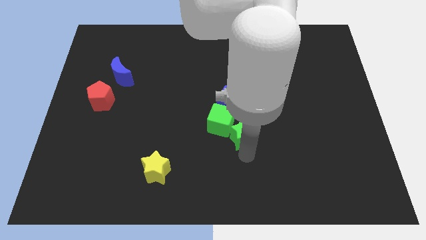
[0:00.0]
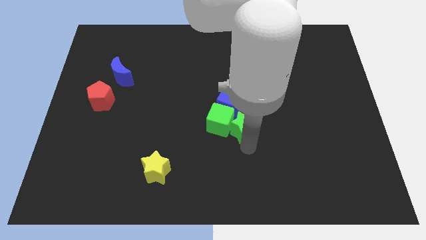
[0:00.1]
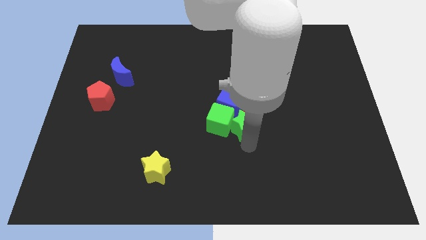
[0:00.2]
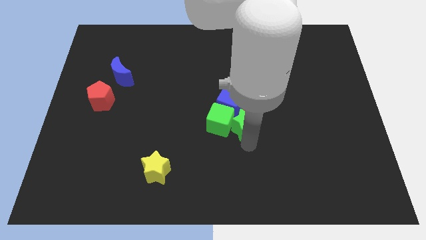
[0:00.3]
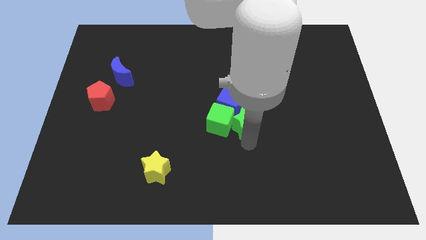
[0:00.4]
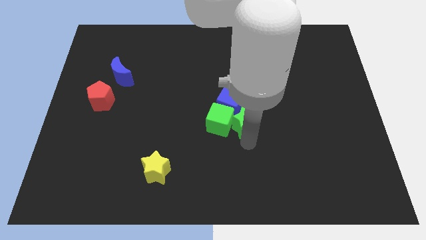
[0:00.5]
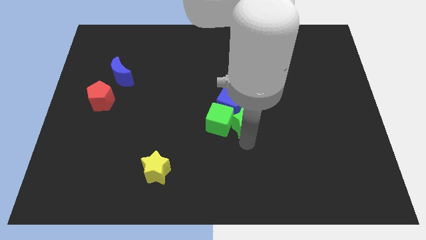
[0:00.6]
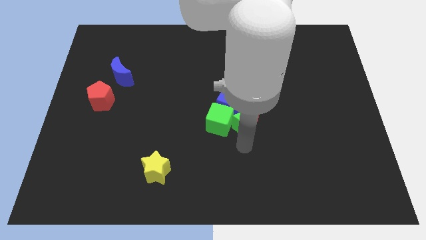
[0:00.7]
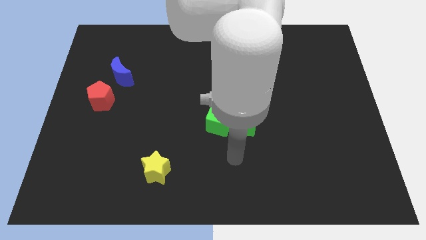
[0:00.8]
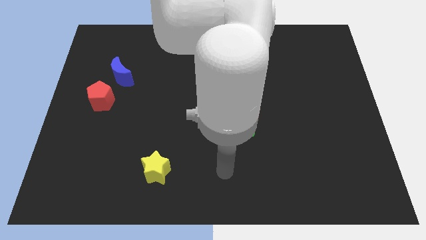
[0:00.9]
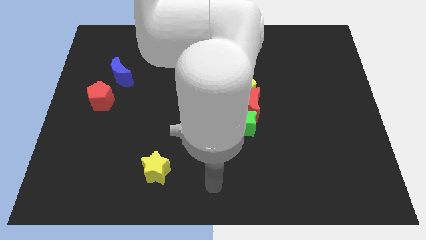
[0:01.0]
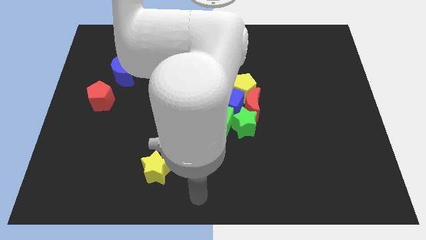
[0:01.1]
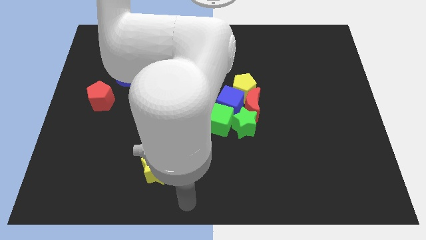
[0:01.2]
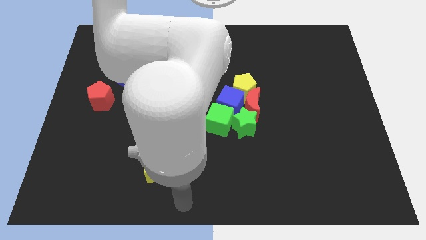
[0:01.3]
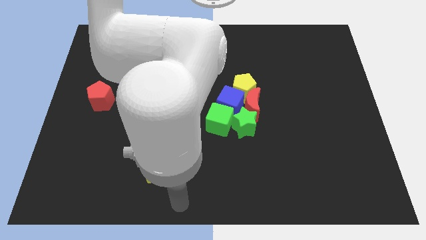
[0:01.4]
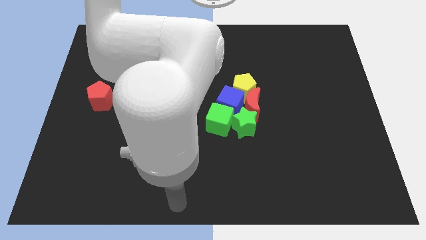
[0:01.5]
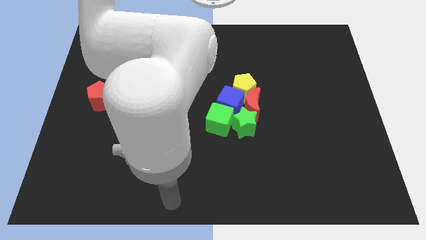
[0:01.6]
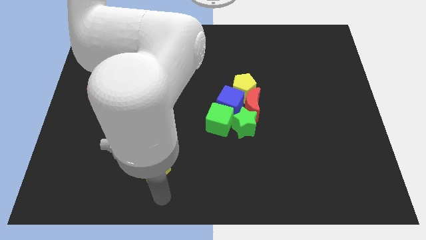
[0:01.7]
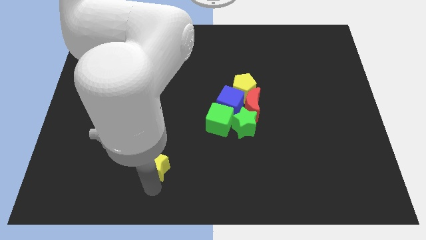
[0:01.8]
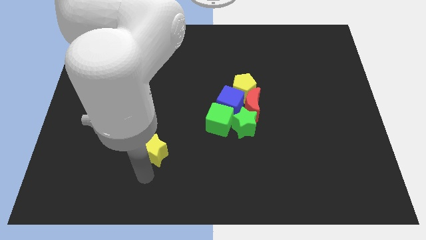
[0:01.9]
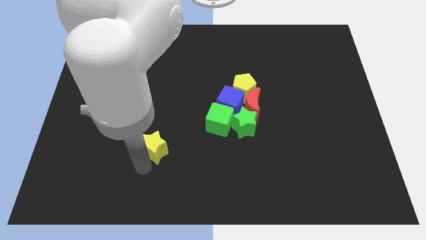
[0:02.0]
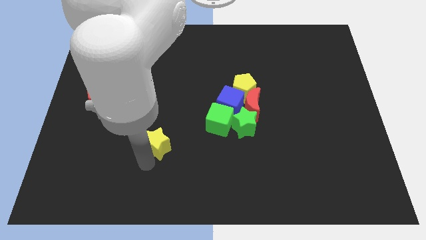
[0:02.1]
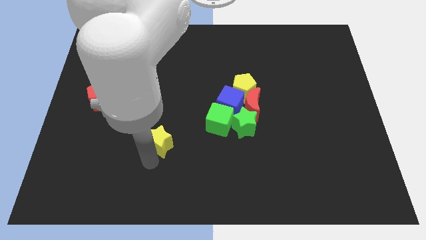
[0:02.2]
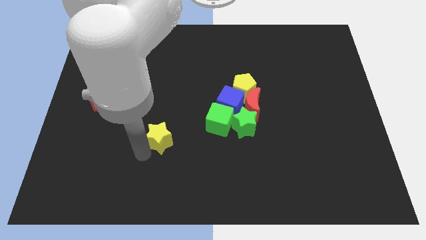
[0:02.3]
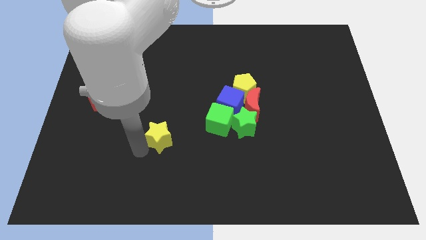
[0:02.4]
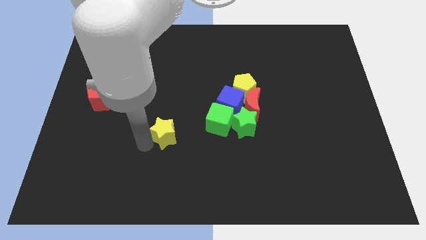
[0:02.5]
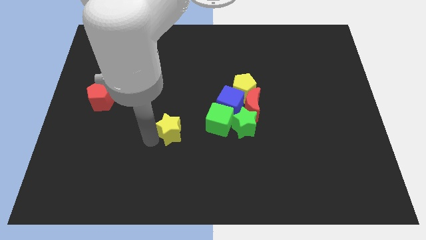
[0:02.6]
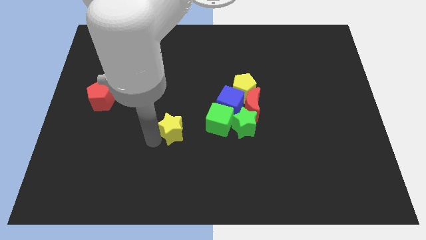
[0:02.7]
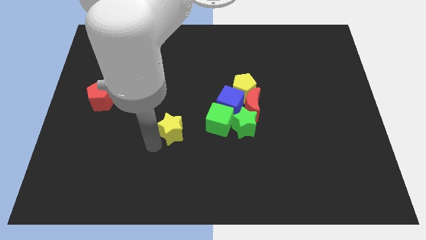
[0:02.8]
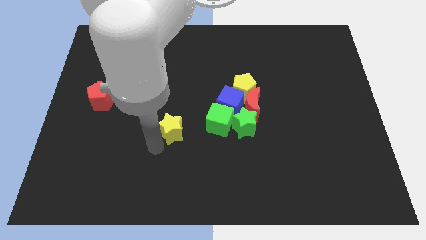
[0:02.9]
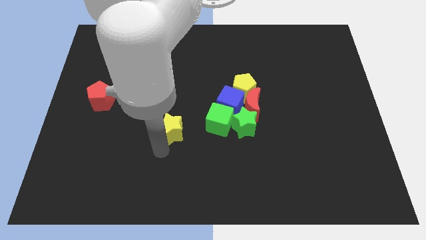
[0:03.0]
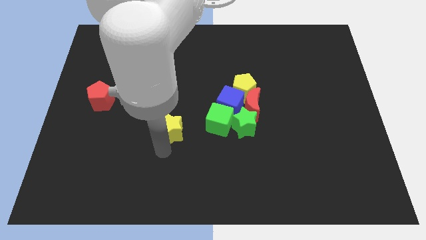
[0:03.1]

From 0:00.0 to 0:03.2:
move the yellow star to the center

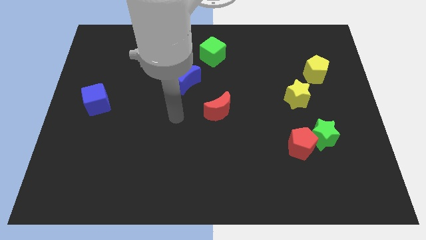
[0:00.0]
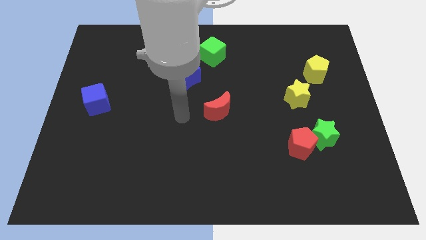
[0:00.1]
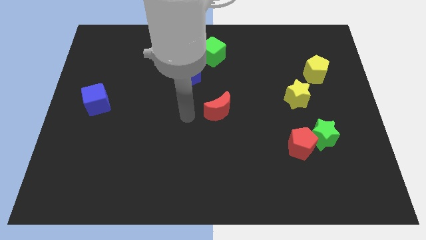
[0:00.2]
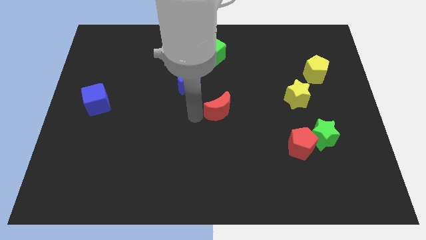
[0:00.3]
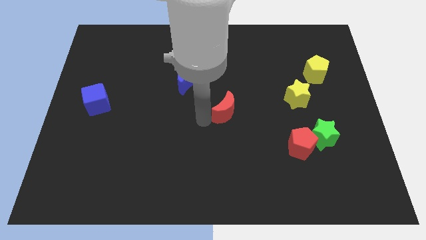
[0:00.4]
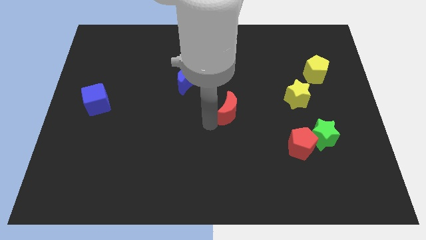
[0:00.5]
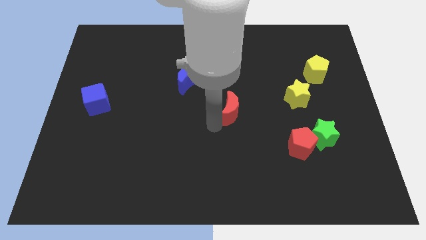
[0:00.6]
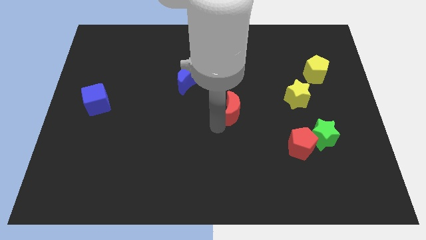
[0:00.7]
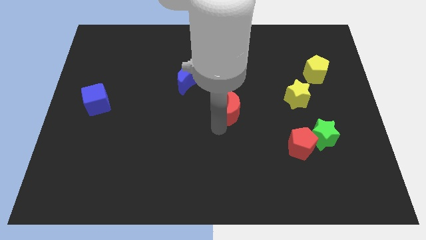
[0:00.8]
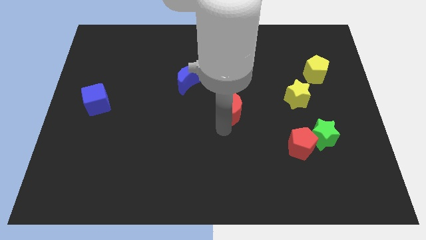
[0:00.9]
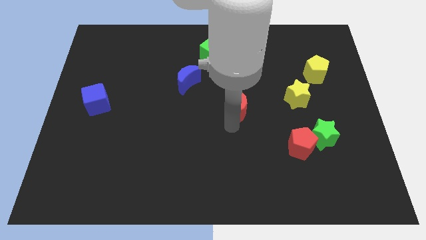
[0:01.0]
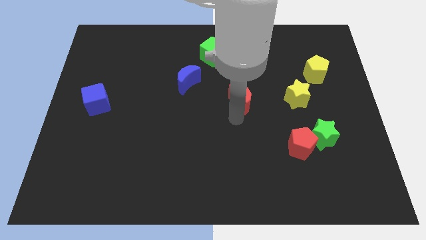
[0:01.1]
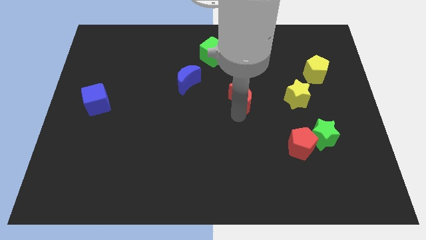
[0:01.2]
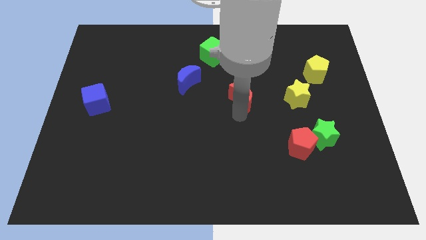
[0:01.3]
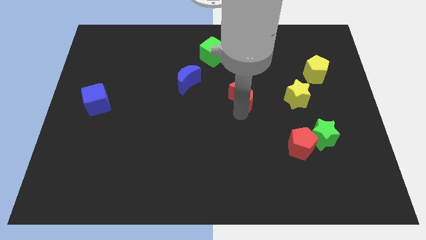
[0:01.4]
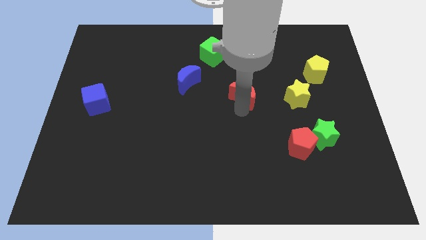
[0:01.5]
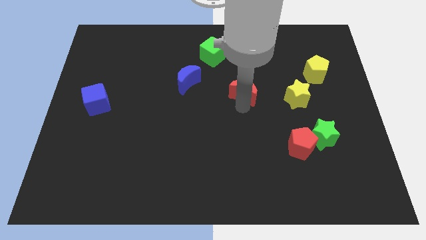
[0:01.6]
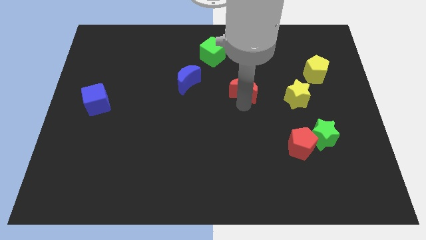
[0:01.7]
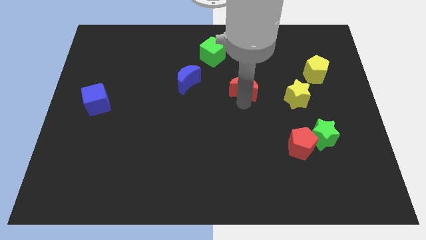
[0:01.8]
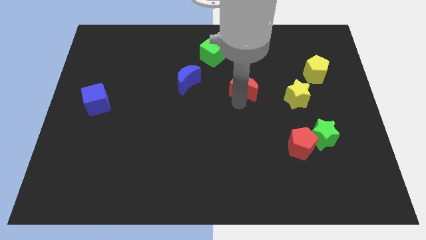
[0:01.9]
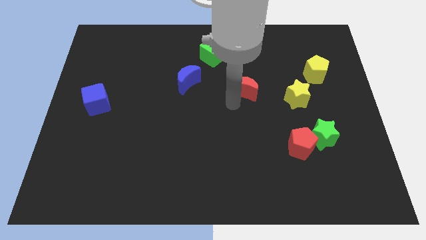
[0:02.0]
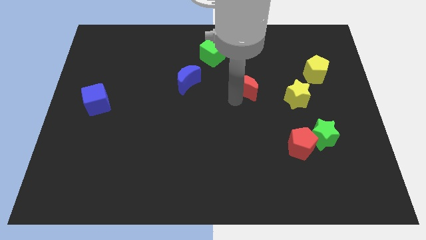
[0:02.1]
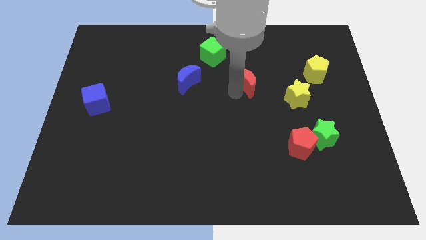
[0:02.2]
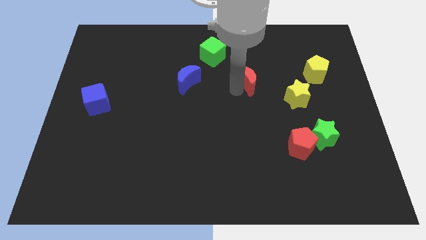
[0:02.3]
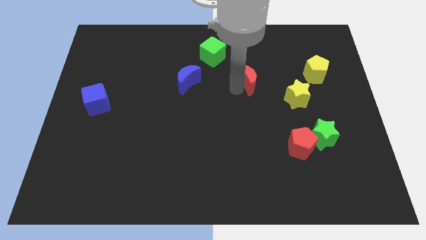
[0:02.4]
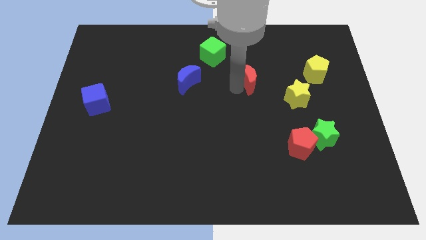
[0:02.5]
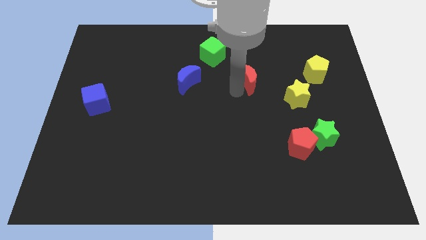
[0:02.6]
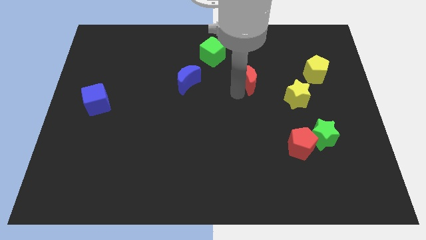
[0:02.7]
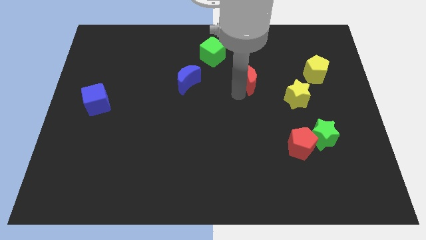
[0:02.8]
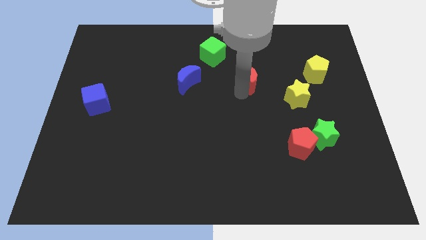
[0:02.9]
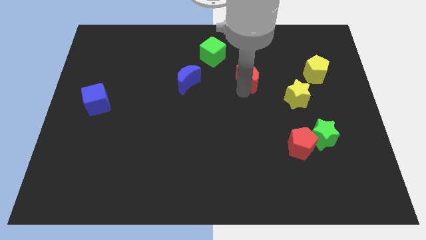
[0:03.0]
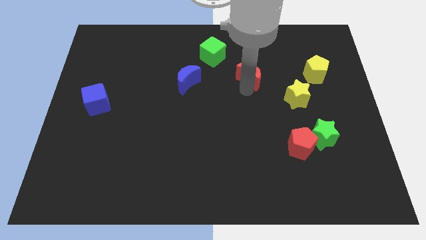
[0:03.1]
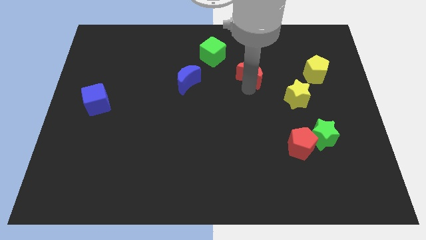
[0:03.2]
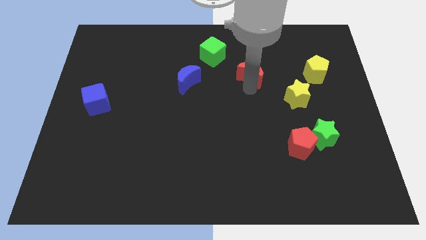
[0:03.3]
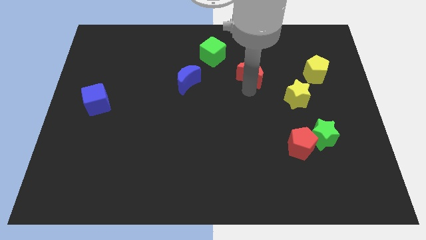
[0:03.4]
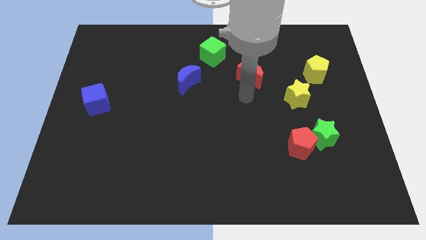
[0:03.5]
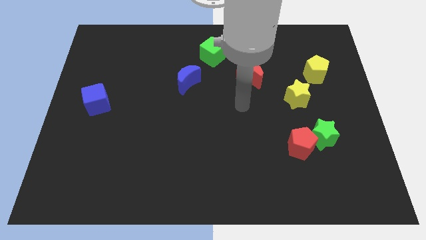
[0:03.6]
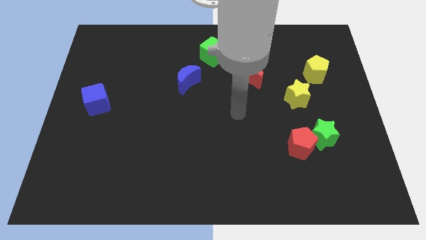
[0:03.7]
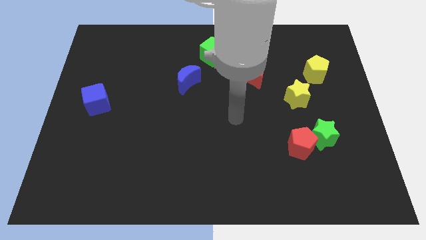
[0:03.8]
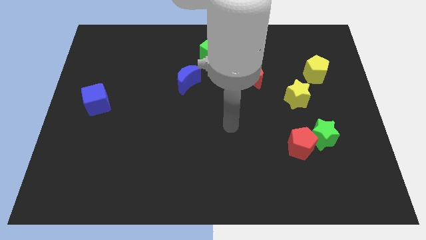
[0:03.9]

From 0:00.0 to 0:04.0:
place the red moon between the green cube and yellow star

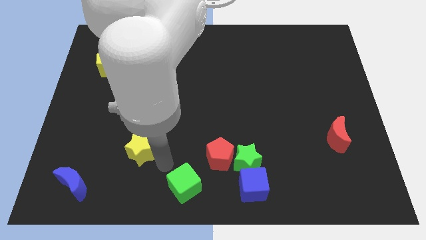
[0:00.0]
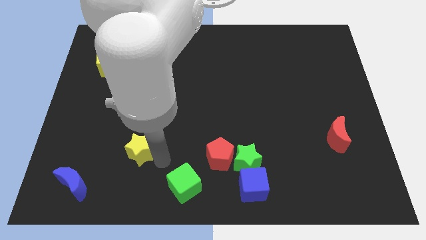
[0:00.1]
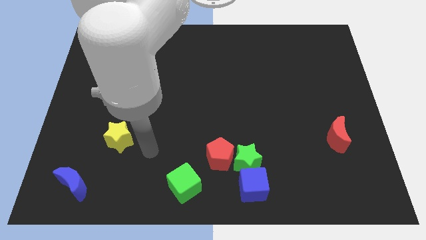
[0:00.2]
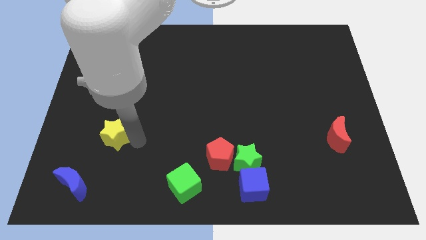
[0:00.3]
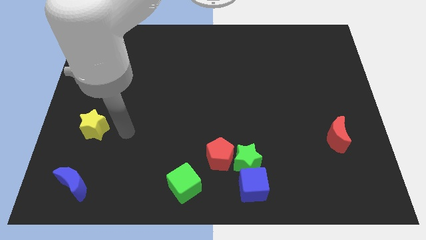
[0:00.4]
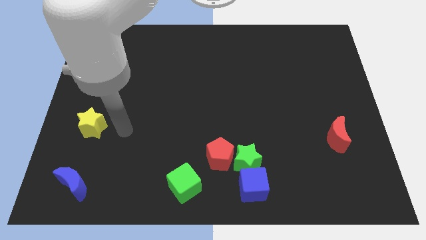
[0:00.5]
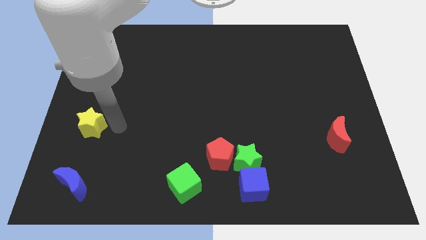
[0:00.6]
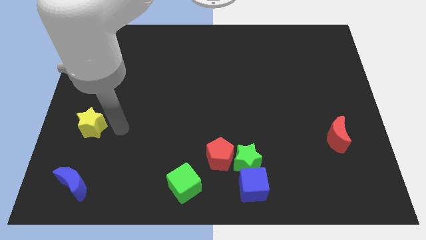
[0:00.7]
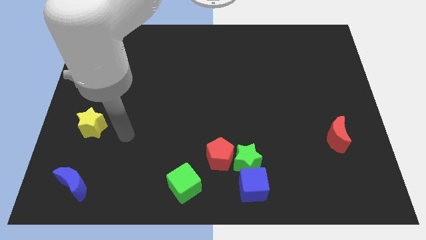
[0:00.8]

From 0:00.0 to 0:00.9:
push the yellow star to the left center of the board

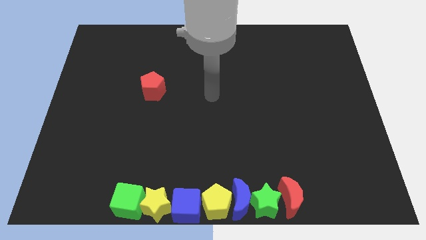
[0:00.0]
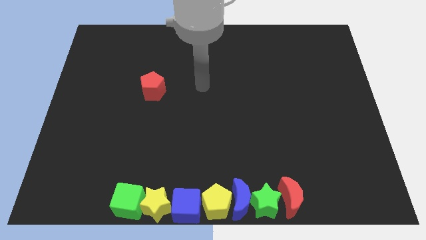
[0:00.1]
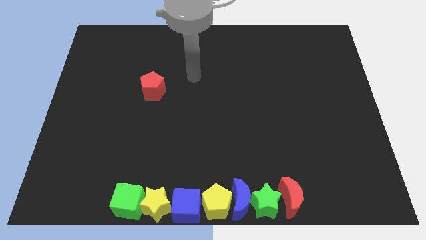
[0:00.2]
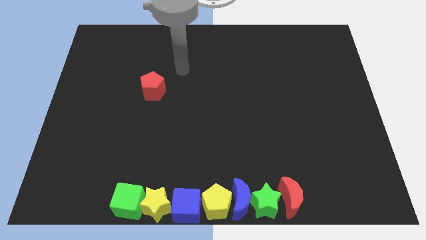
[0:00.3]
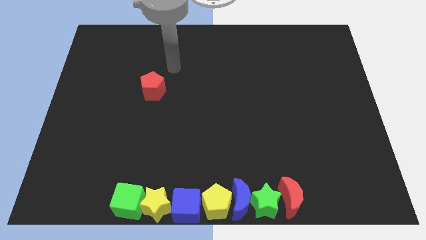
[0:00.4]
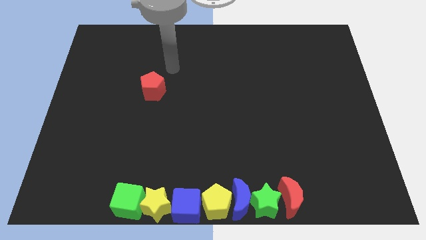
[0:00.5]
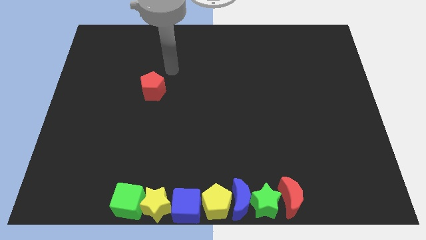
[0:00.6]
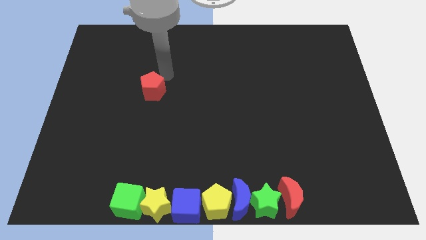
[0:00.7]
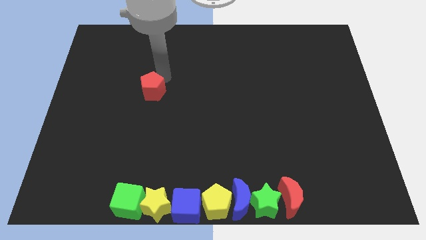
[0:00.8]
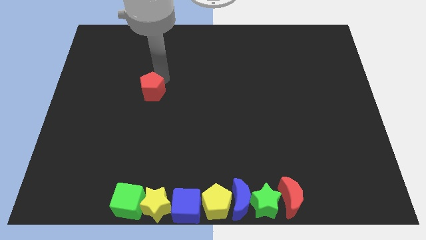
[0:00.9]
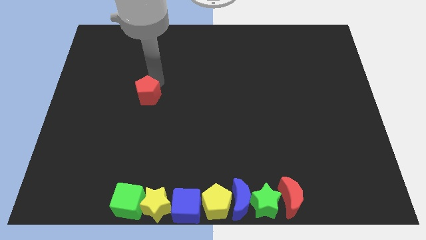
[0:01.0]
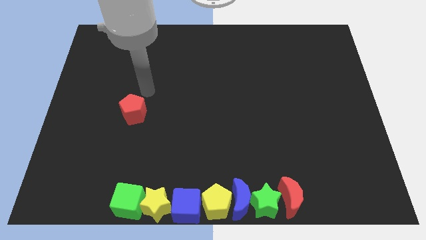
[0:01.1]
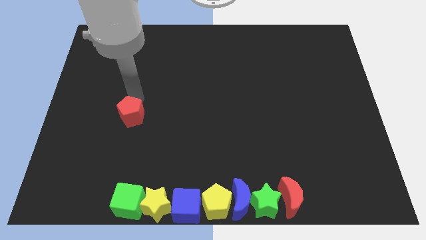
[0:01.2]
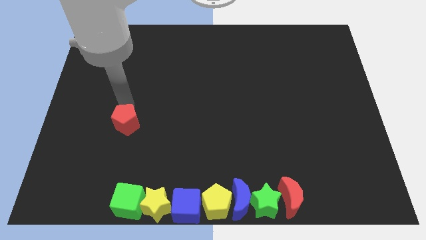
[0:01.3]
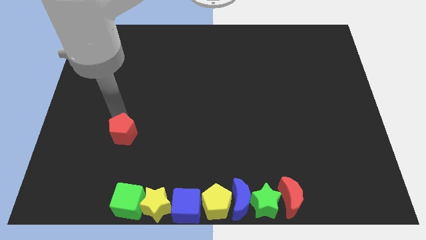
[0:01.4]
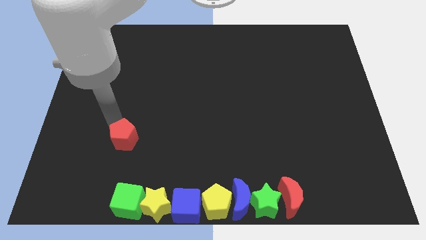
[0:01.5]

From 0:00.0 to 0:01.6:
push the red pentagon towards the group of blocks
